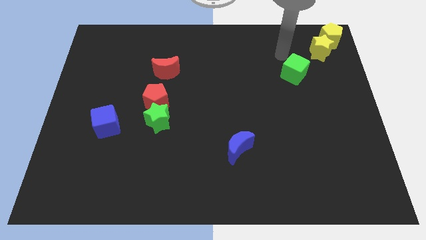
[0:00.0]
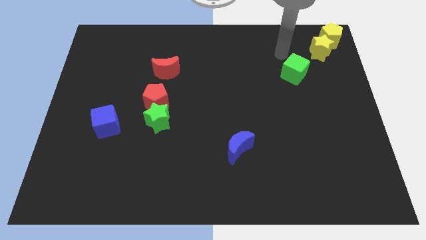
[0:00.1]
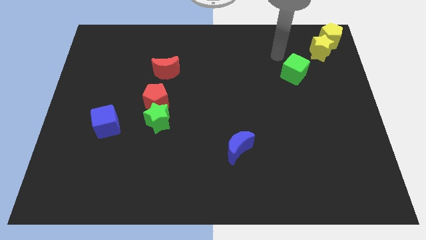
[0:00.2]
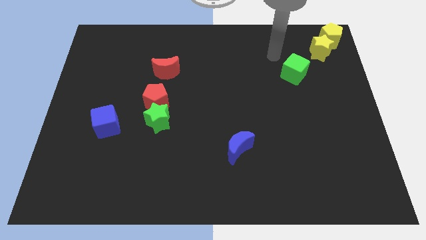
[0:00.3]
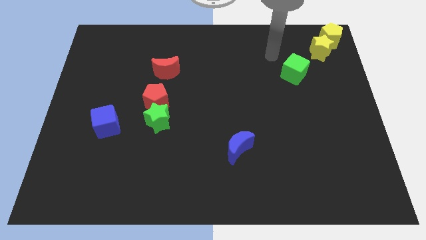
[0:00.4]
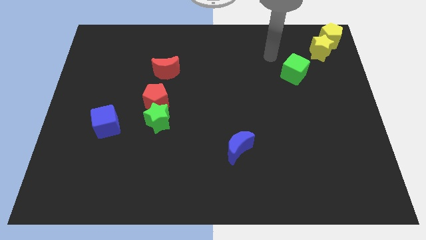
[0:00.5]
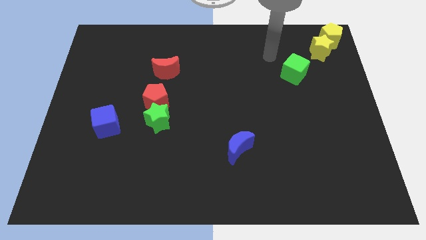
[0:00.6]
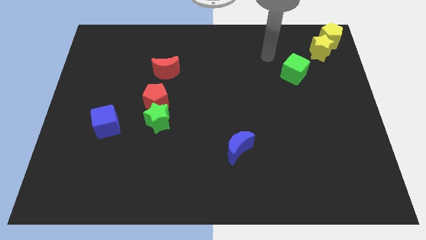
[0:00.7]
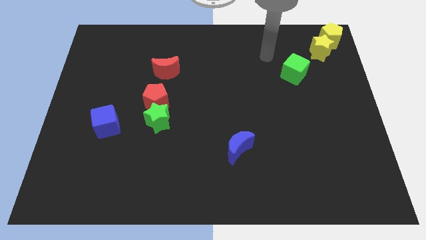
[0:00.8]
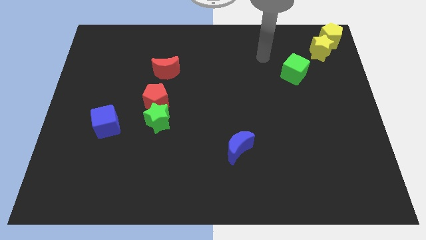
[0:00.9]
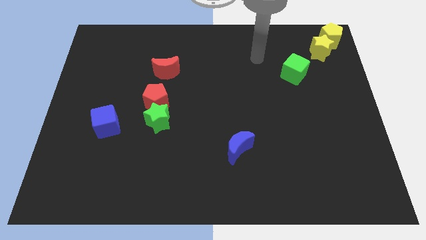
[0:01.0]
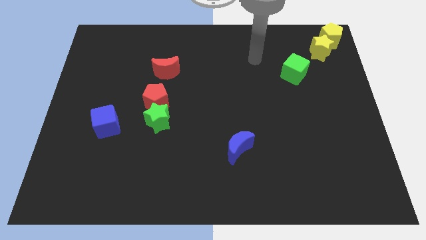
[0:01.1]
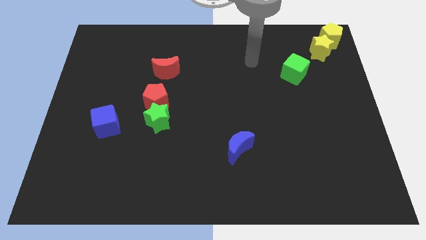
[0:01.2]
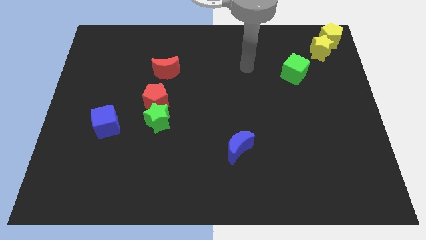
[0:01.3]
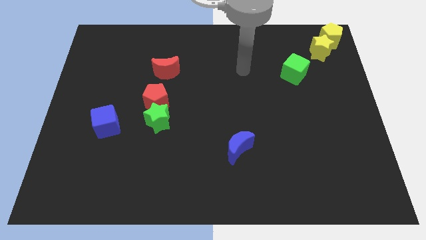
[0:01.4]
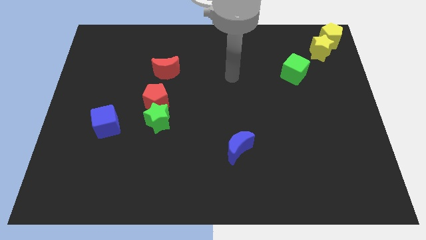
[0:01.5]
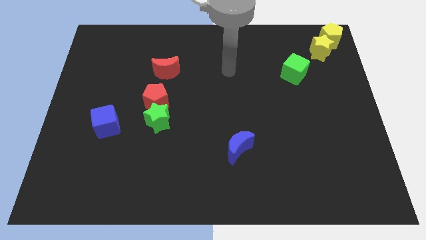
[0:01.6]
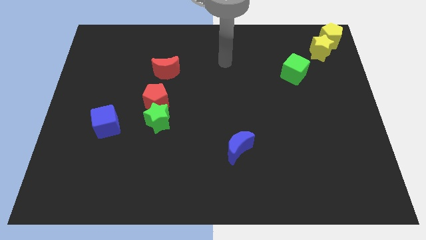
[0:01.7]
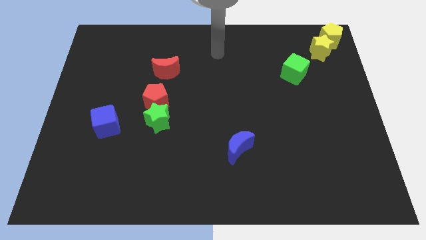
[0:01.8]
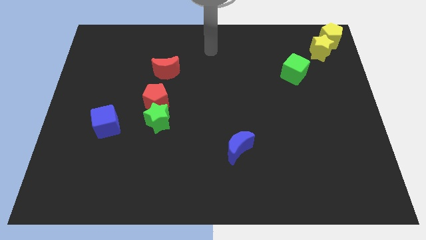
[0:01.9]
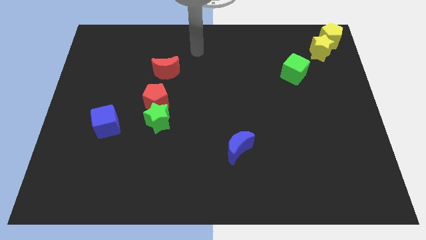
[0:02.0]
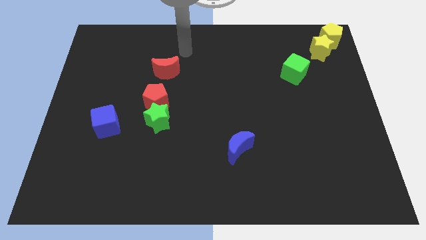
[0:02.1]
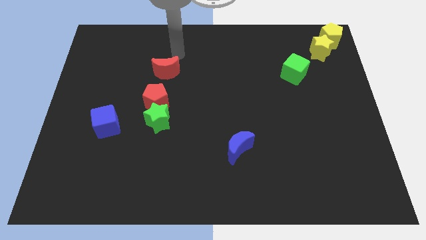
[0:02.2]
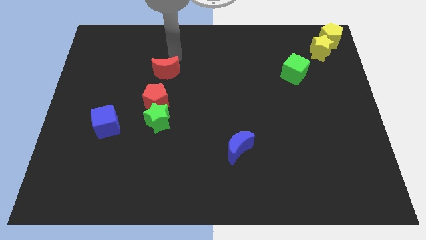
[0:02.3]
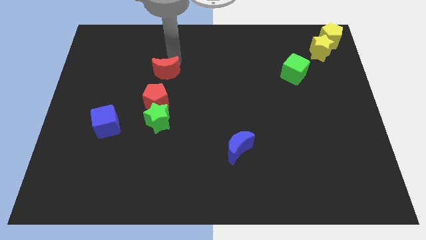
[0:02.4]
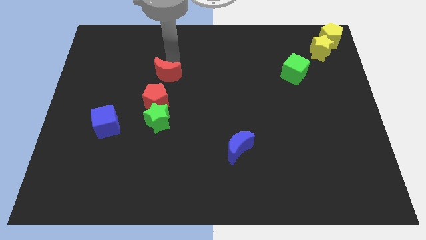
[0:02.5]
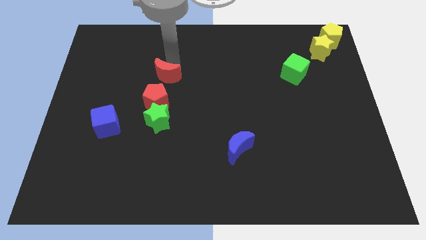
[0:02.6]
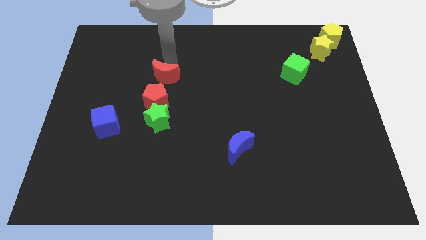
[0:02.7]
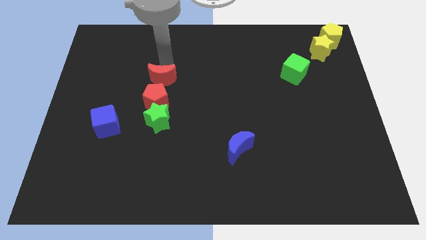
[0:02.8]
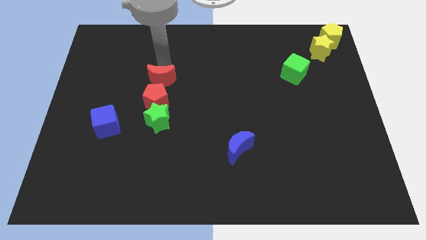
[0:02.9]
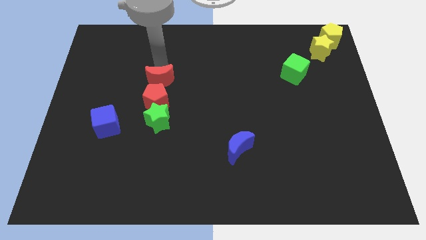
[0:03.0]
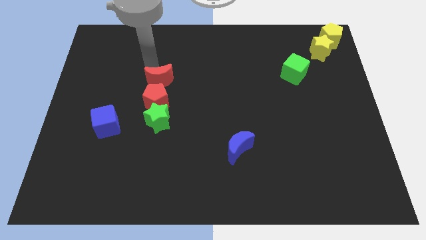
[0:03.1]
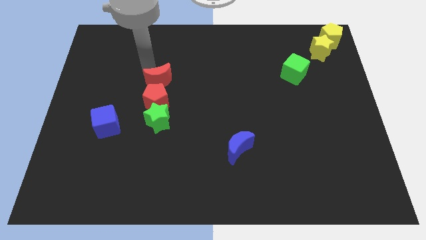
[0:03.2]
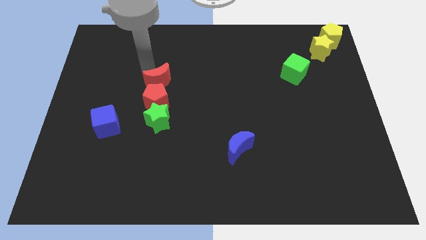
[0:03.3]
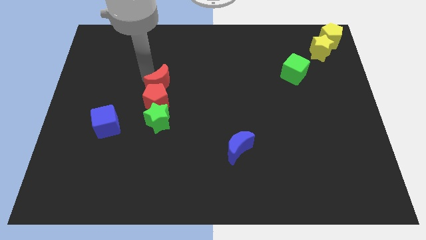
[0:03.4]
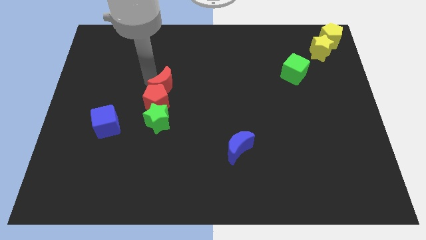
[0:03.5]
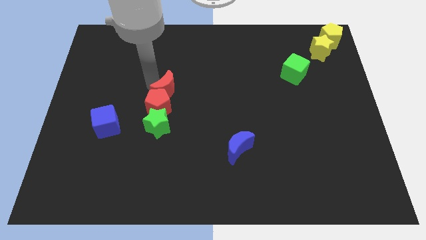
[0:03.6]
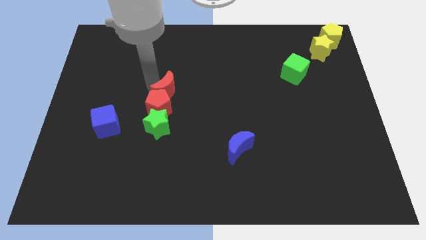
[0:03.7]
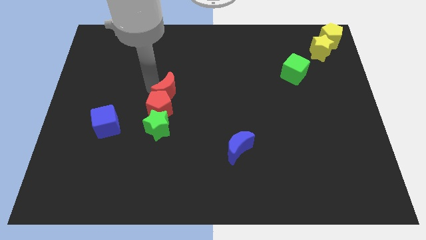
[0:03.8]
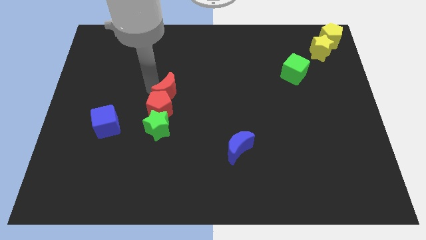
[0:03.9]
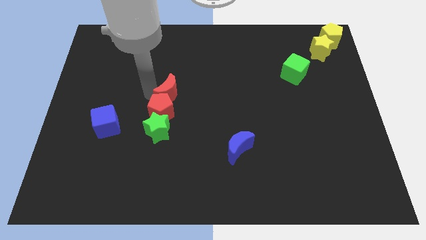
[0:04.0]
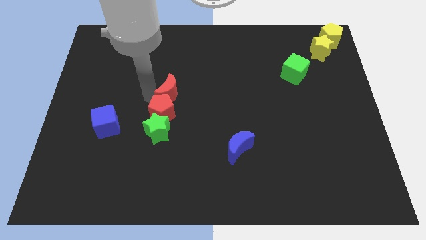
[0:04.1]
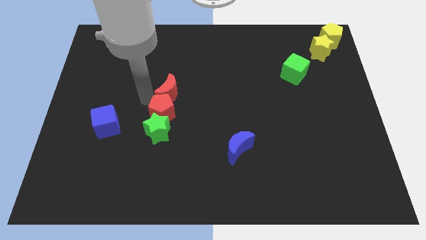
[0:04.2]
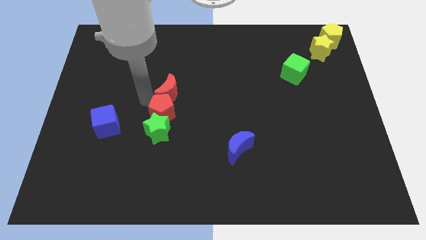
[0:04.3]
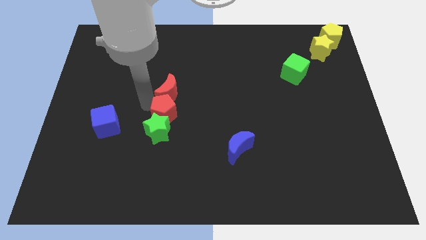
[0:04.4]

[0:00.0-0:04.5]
move the red moon into the red pentagon

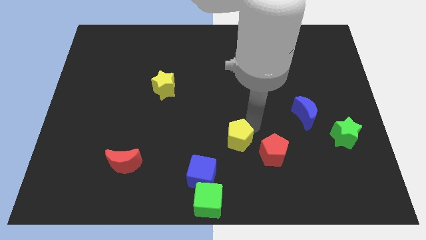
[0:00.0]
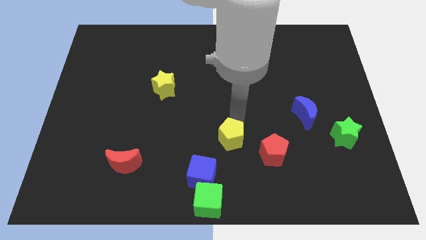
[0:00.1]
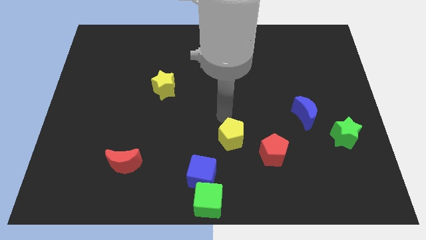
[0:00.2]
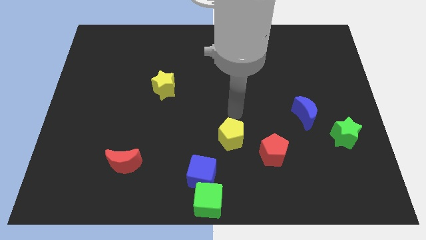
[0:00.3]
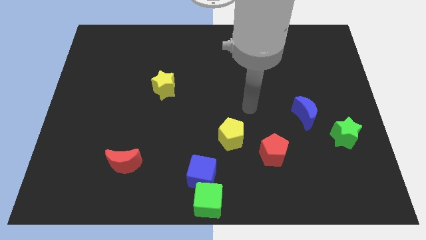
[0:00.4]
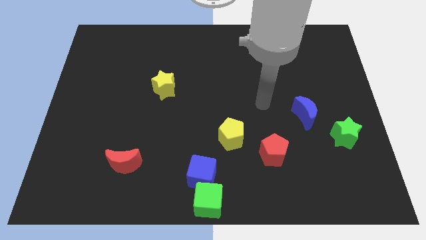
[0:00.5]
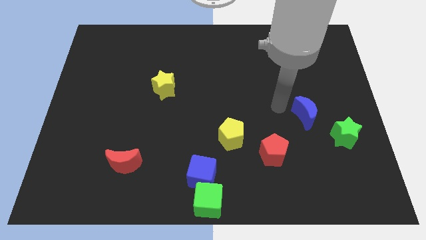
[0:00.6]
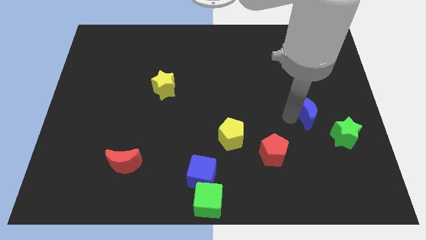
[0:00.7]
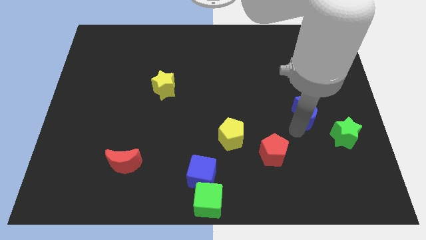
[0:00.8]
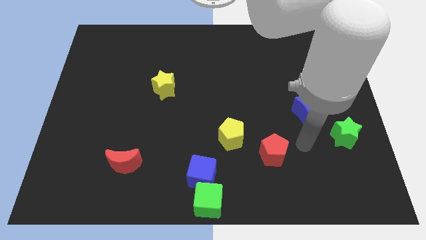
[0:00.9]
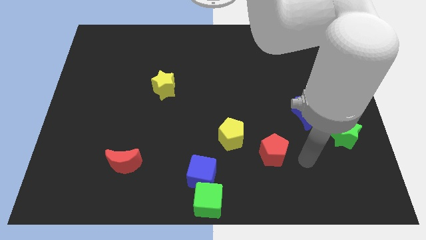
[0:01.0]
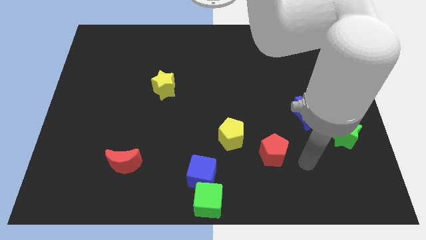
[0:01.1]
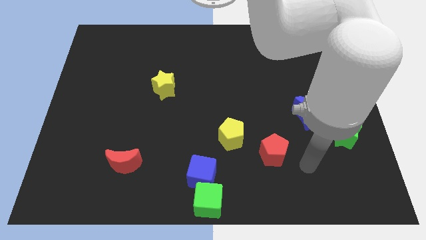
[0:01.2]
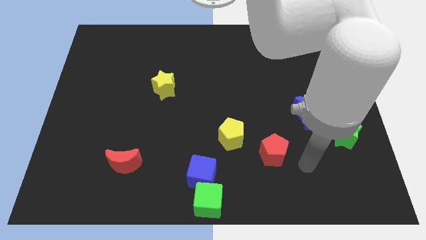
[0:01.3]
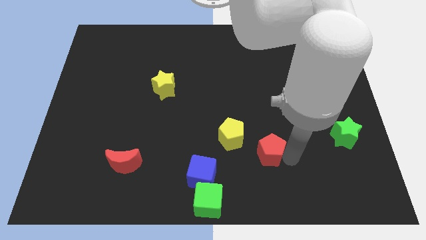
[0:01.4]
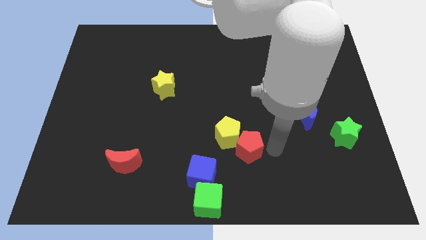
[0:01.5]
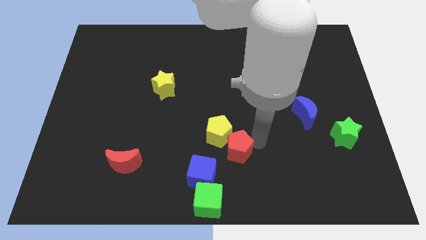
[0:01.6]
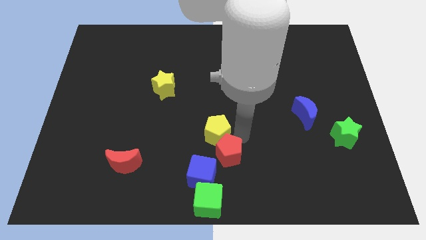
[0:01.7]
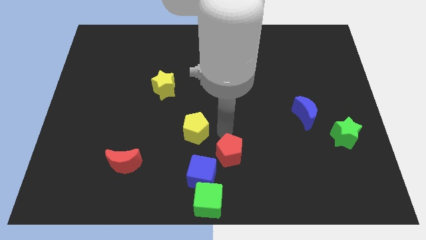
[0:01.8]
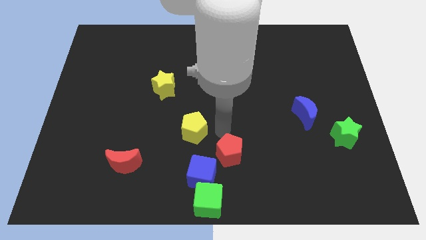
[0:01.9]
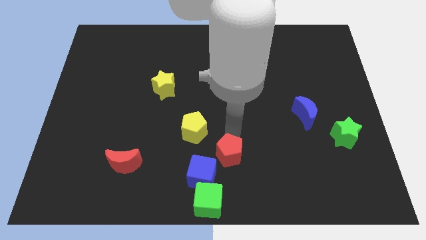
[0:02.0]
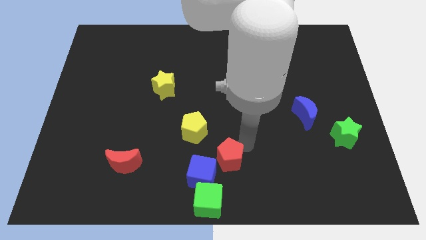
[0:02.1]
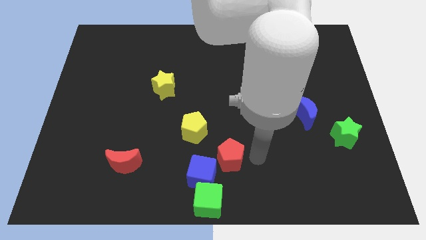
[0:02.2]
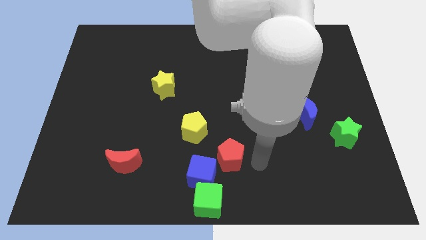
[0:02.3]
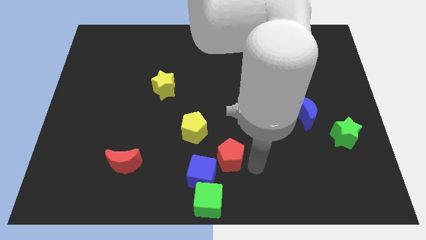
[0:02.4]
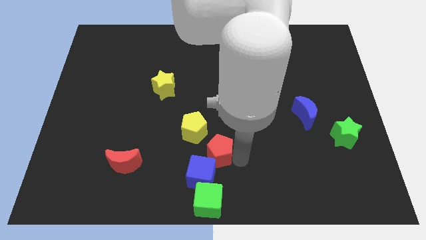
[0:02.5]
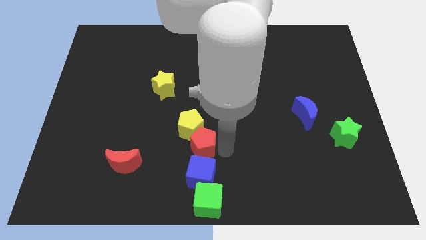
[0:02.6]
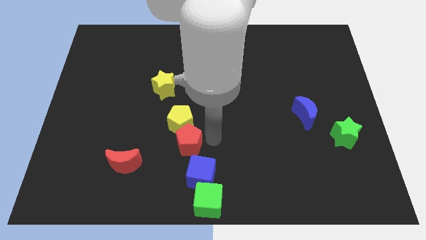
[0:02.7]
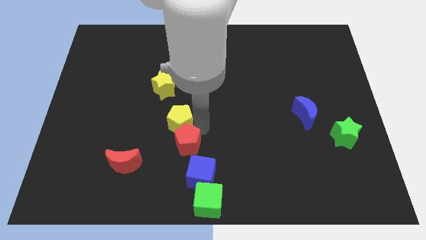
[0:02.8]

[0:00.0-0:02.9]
make a diagonal line of blocks by adding the yellow pentagon and red pentagon

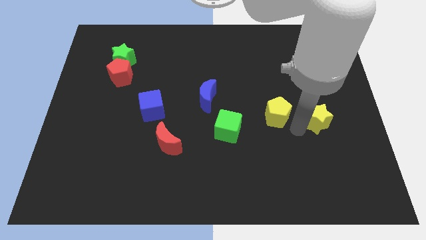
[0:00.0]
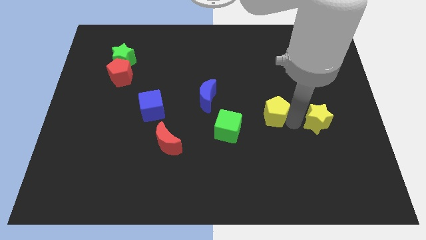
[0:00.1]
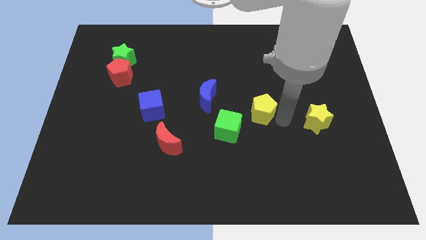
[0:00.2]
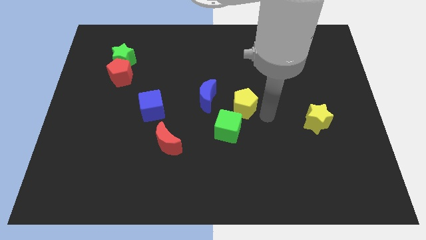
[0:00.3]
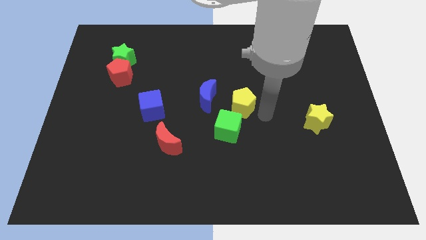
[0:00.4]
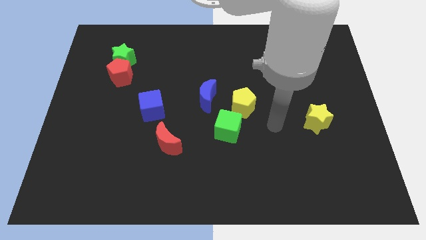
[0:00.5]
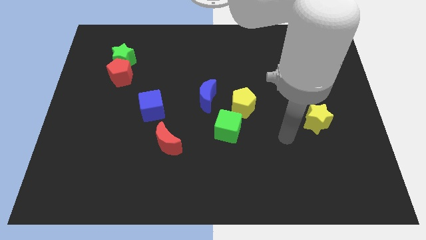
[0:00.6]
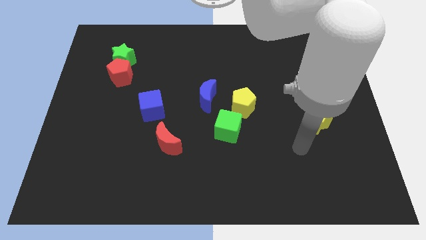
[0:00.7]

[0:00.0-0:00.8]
push the yellow pentagon to the top right to the green cube

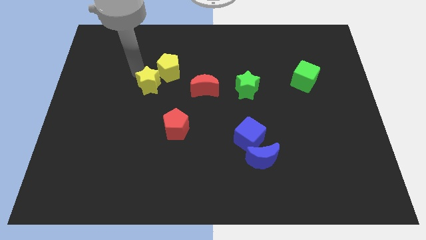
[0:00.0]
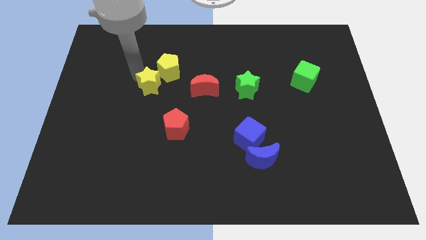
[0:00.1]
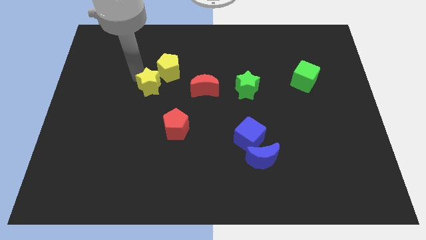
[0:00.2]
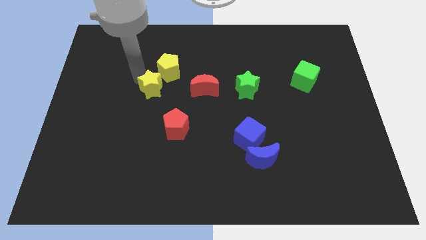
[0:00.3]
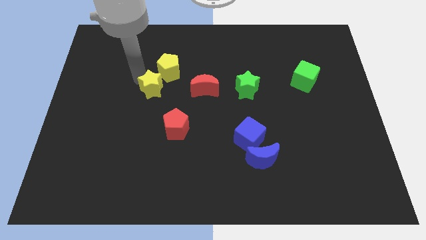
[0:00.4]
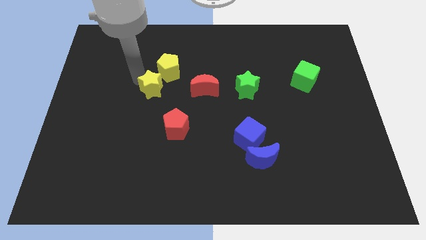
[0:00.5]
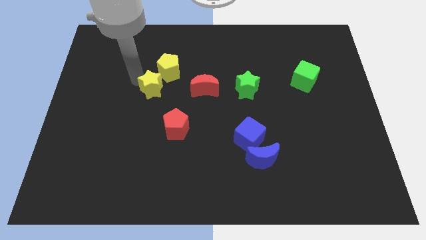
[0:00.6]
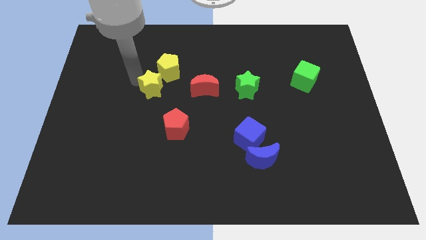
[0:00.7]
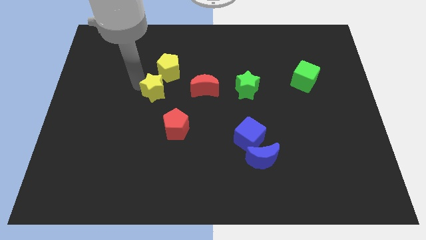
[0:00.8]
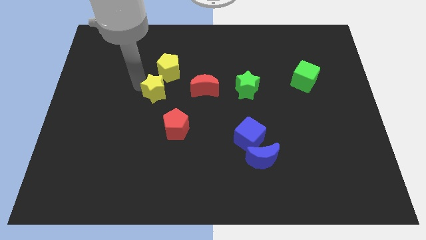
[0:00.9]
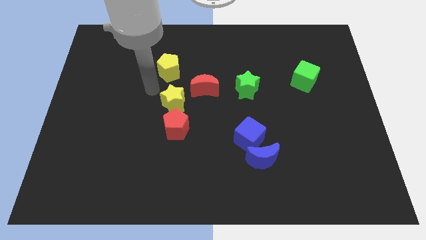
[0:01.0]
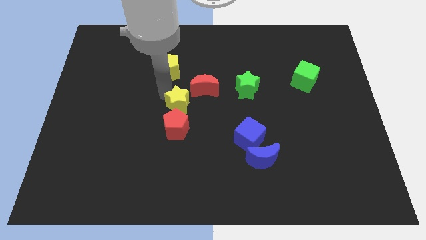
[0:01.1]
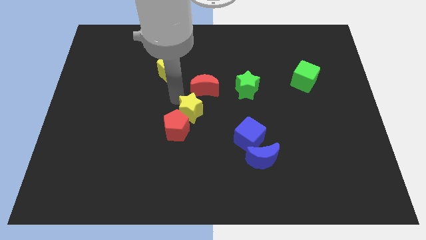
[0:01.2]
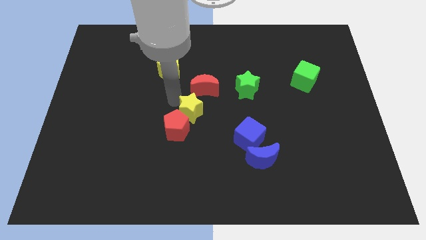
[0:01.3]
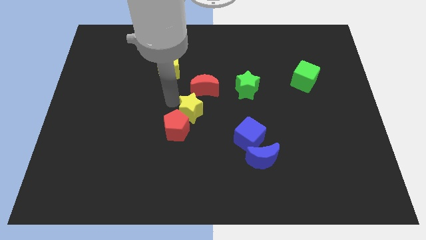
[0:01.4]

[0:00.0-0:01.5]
move the yellow star to the top of the red pentagon
